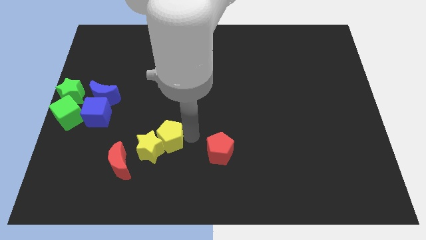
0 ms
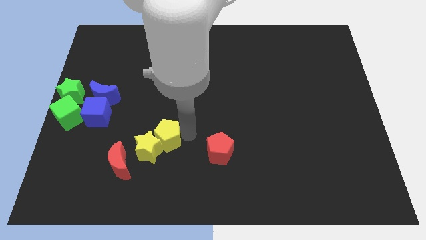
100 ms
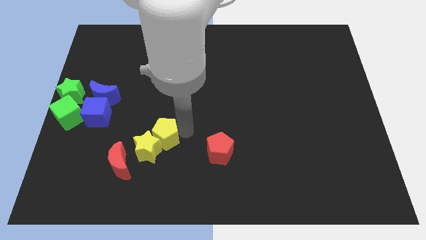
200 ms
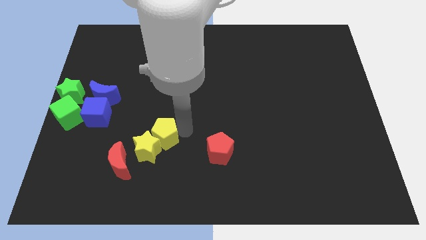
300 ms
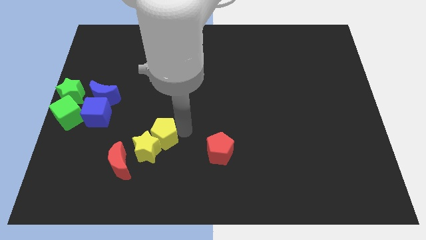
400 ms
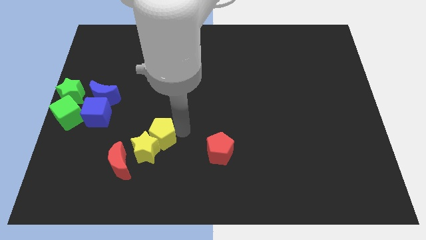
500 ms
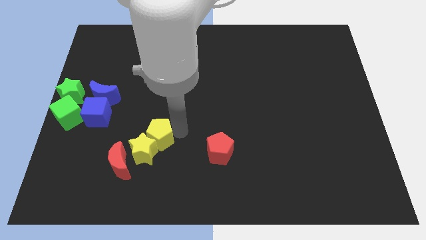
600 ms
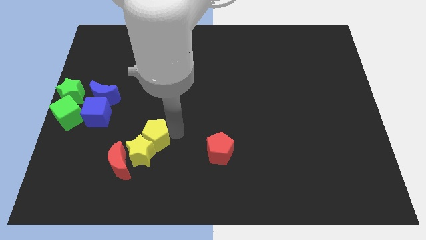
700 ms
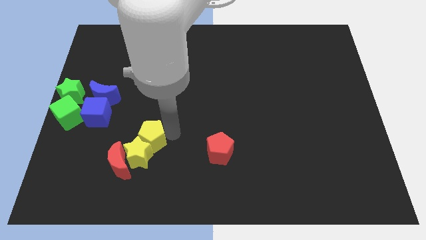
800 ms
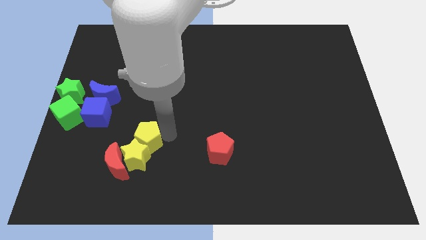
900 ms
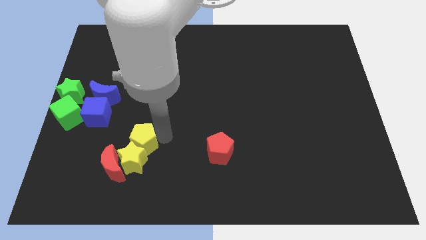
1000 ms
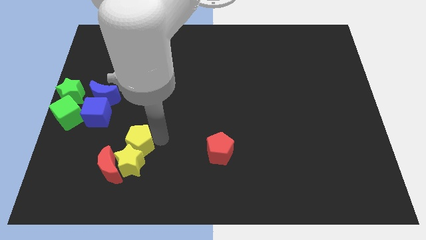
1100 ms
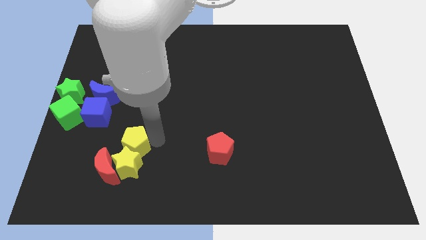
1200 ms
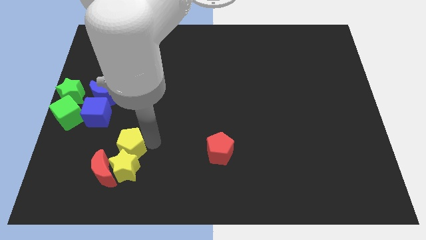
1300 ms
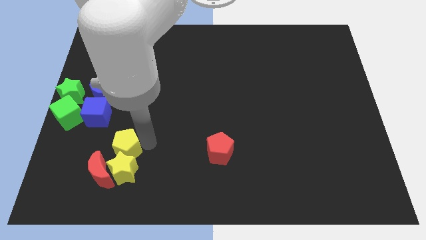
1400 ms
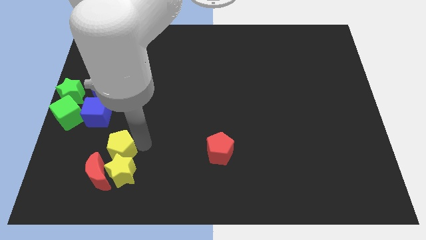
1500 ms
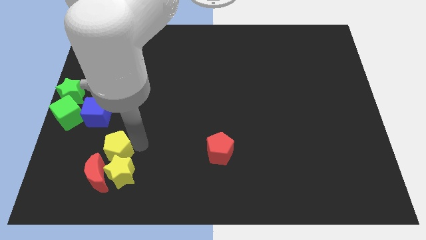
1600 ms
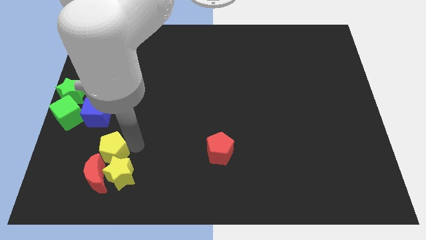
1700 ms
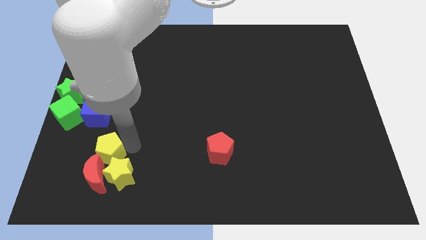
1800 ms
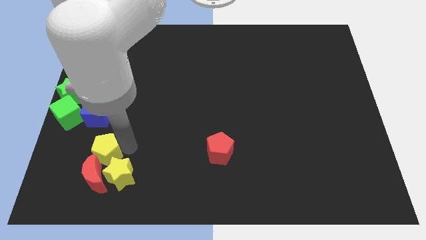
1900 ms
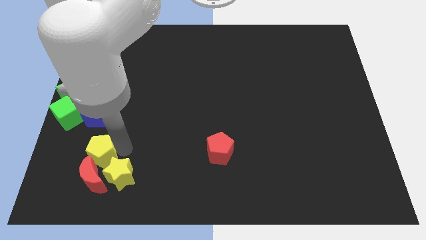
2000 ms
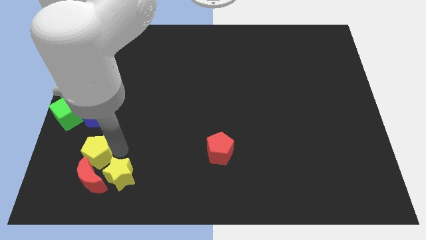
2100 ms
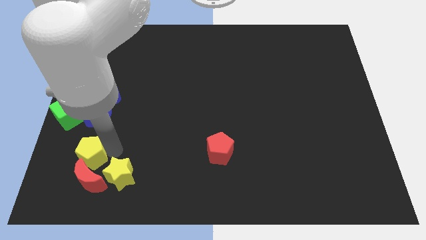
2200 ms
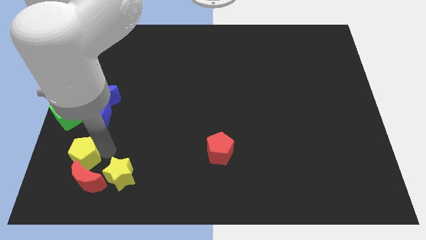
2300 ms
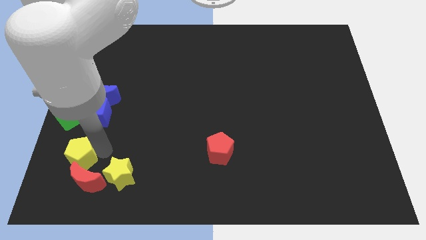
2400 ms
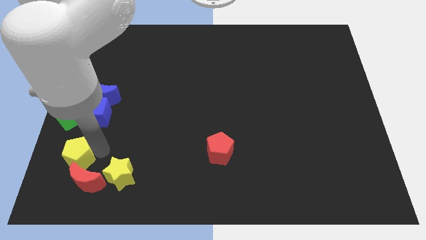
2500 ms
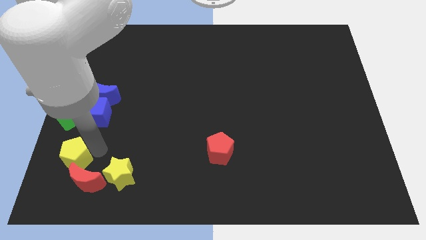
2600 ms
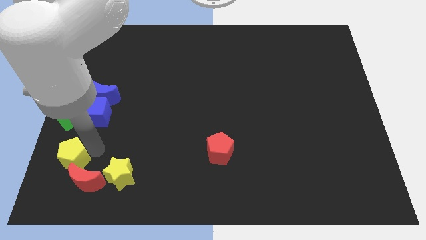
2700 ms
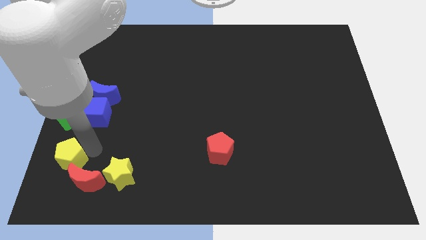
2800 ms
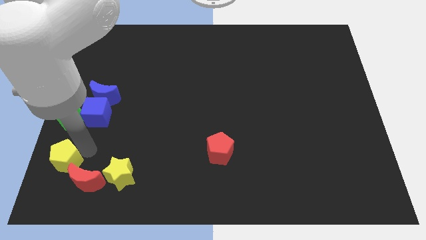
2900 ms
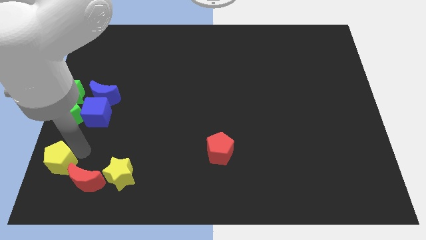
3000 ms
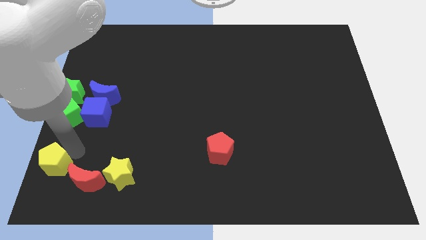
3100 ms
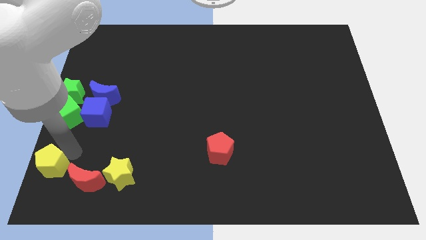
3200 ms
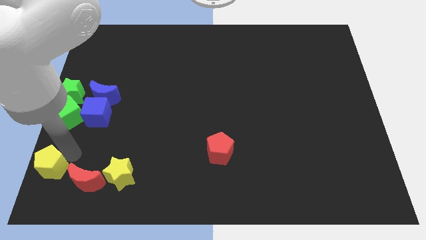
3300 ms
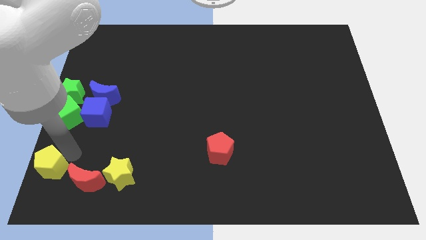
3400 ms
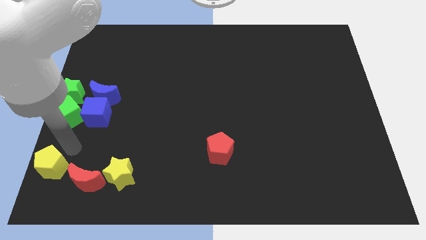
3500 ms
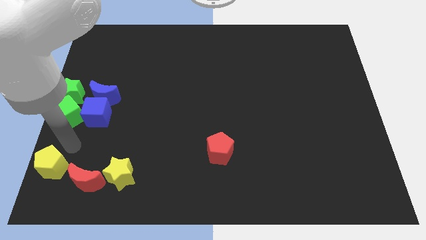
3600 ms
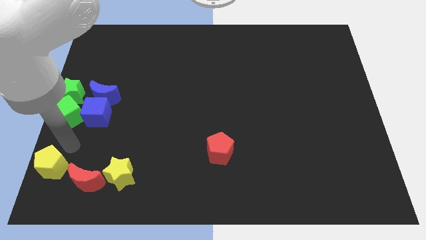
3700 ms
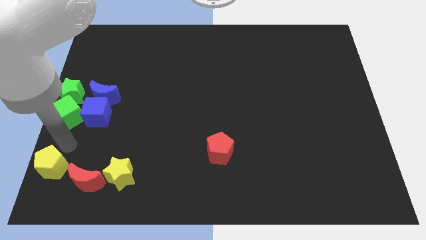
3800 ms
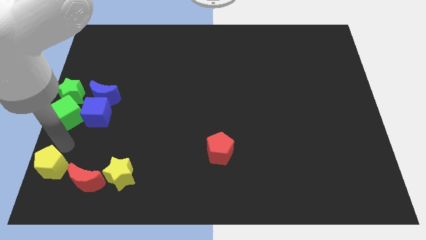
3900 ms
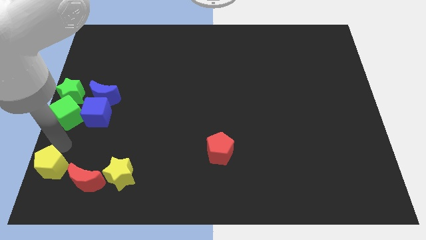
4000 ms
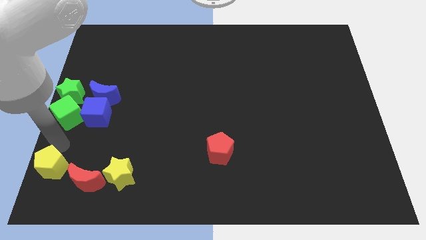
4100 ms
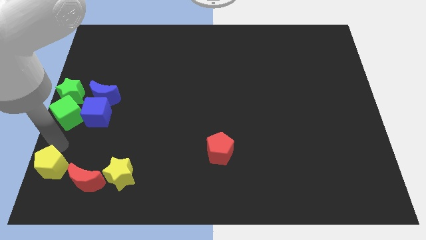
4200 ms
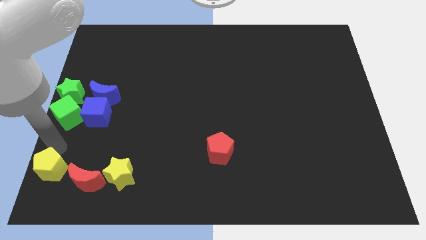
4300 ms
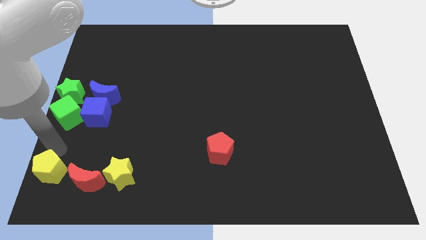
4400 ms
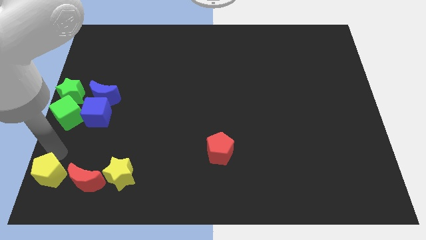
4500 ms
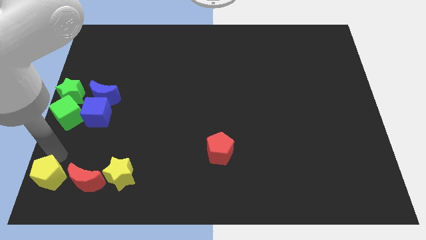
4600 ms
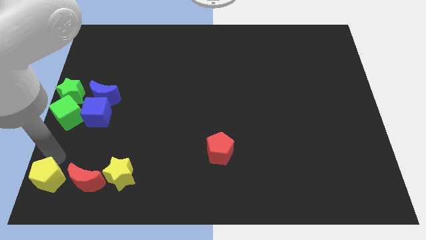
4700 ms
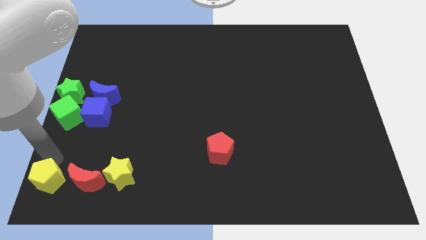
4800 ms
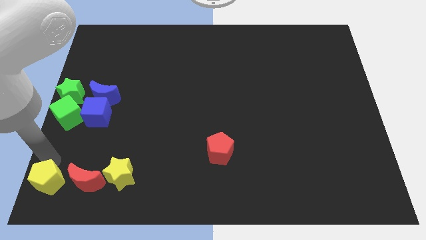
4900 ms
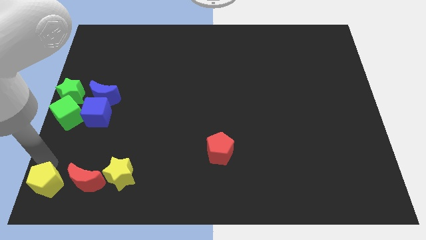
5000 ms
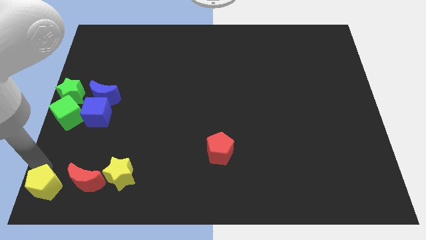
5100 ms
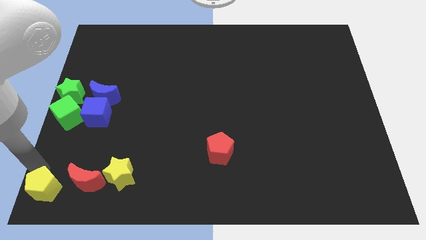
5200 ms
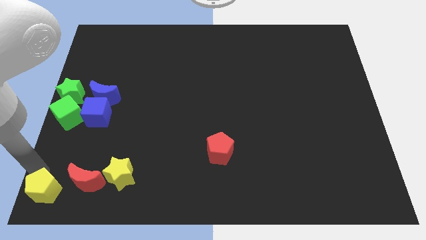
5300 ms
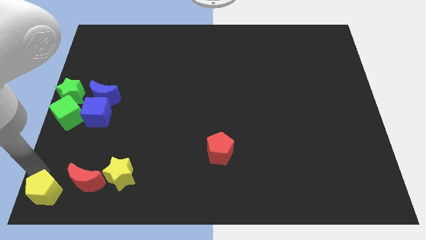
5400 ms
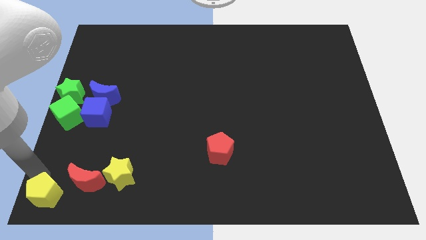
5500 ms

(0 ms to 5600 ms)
move the yellow pentagon towards the bottom left of the board

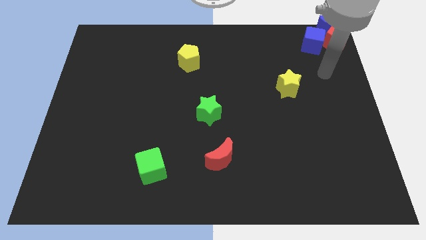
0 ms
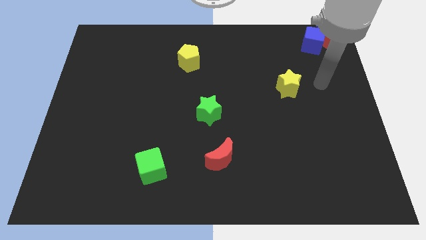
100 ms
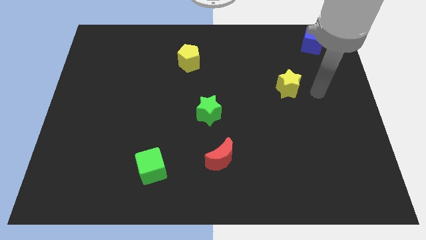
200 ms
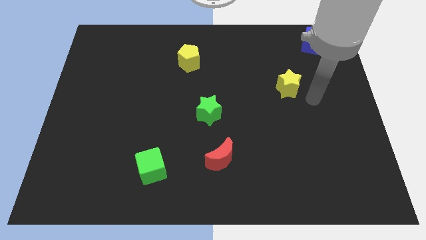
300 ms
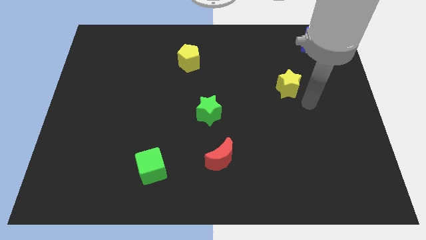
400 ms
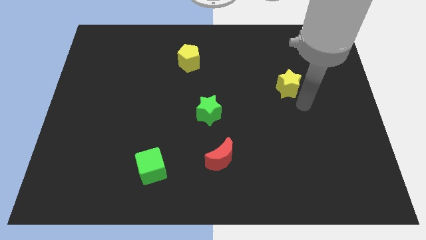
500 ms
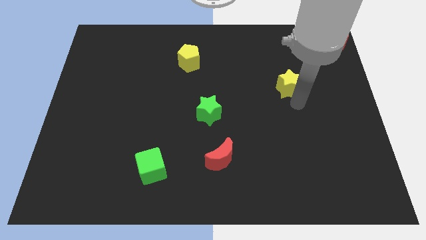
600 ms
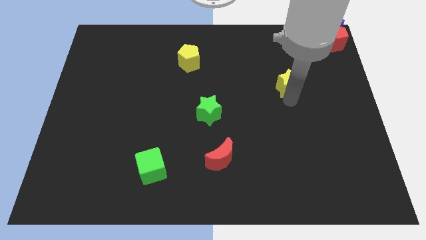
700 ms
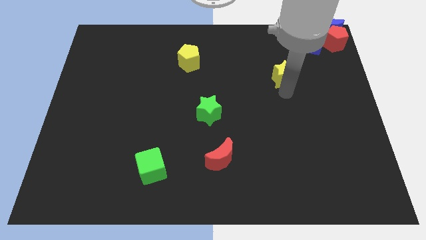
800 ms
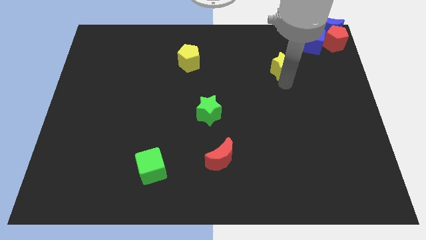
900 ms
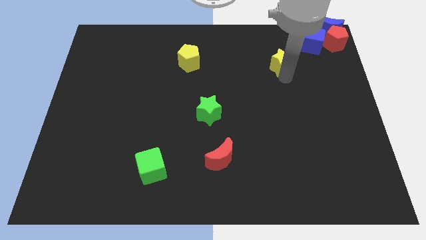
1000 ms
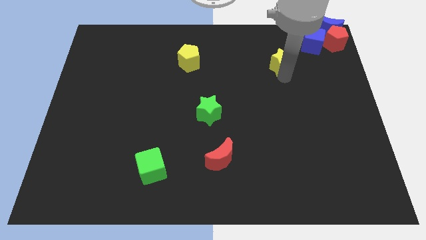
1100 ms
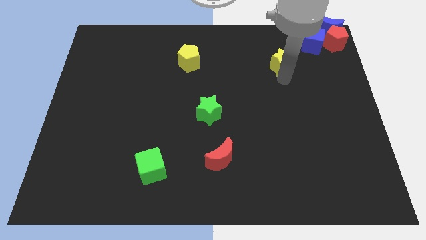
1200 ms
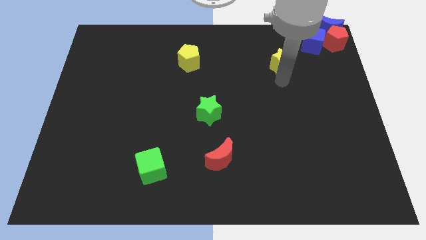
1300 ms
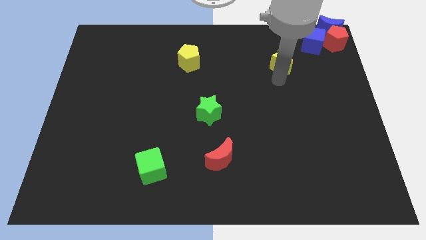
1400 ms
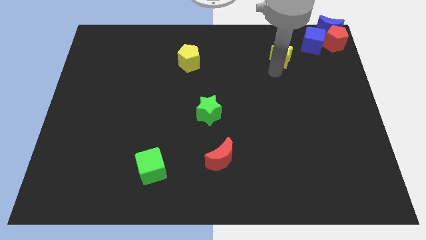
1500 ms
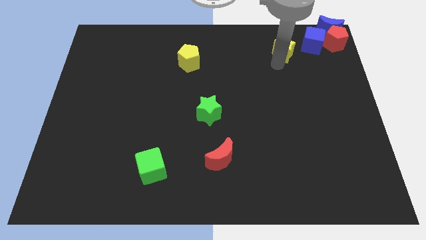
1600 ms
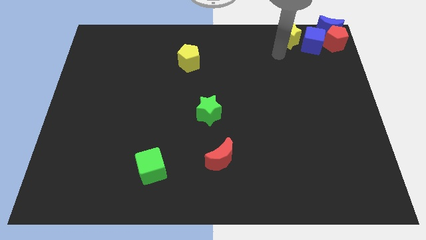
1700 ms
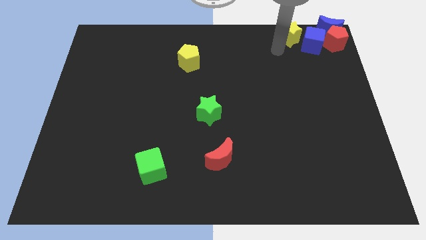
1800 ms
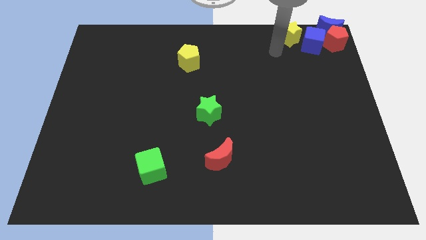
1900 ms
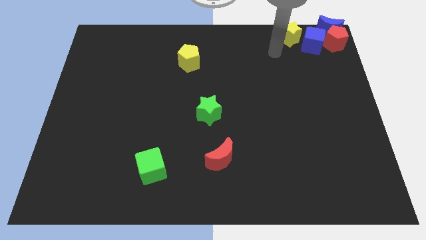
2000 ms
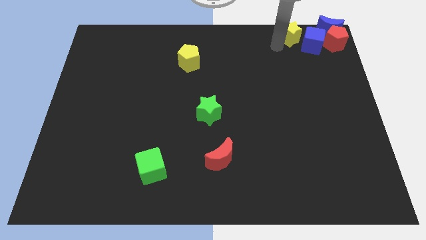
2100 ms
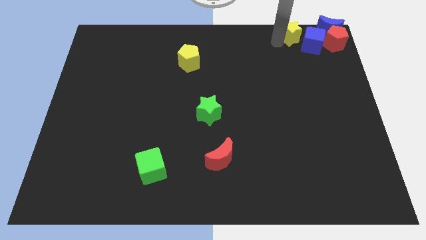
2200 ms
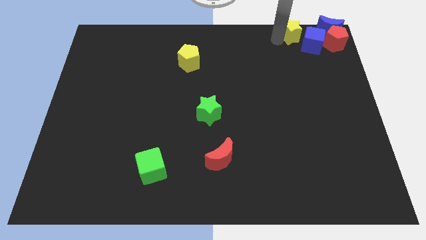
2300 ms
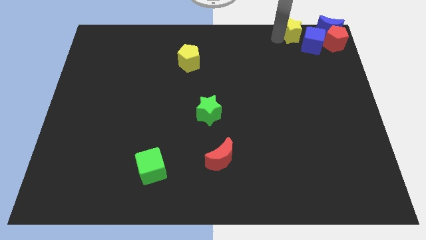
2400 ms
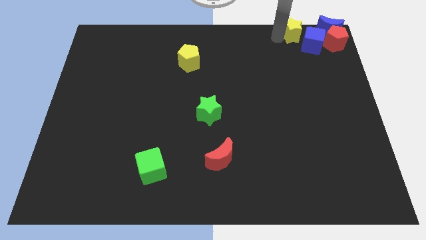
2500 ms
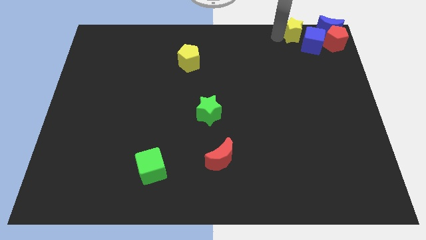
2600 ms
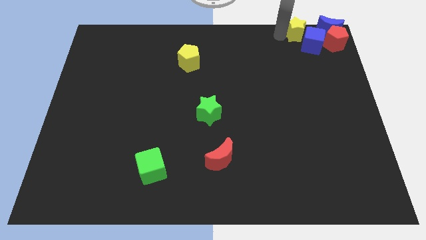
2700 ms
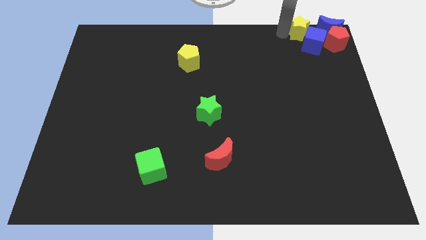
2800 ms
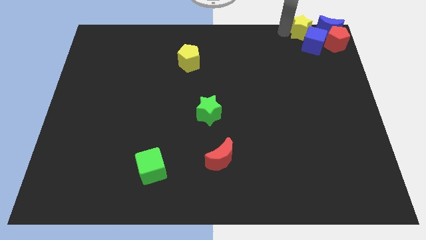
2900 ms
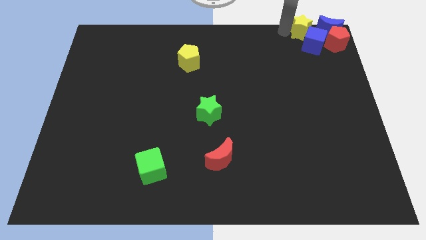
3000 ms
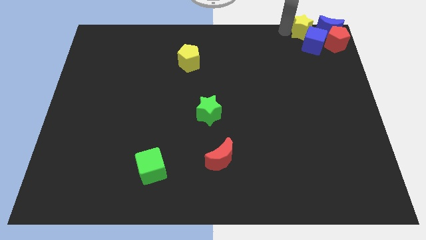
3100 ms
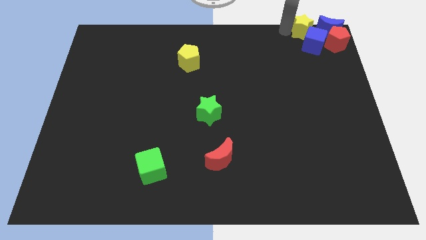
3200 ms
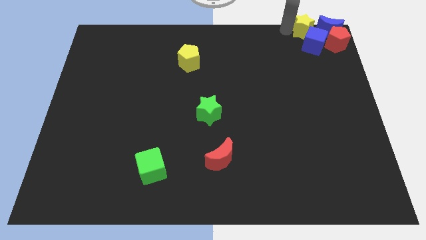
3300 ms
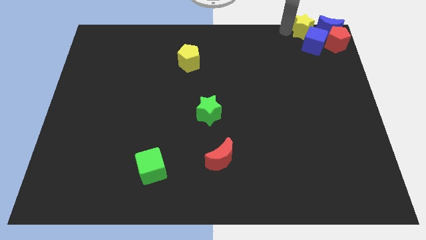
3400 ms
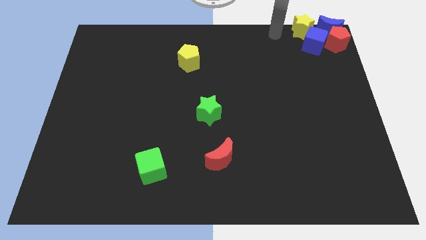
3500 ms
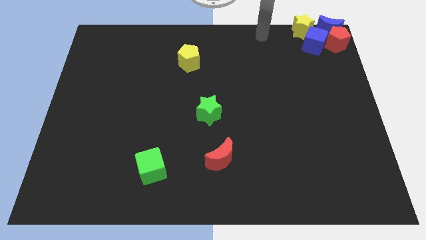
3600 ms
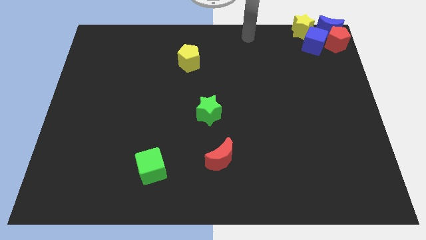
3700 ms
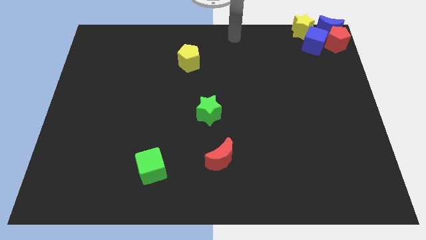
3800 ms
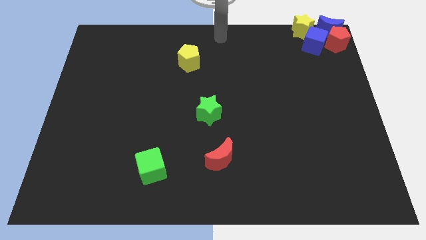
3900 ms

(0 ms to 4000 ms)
push the yellow star to the left of the blue crescent
